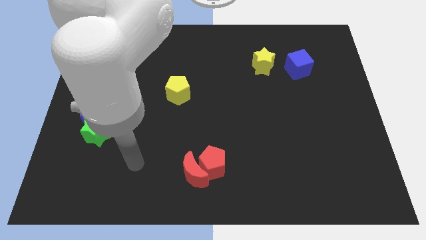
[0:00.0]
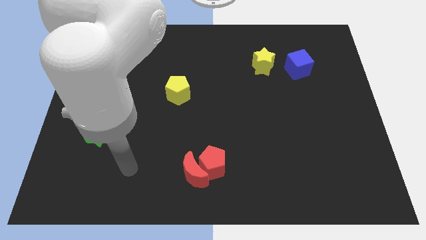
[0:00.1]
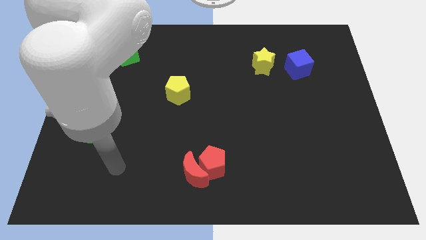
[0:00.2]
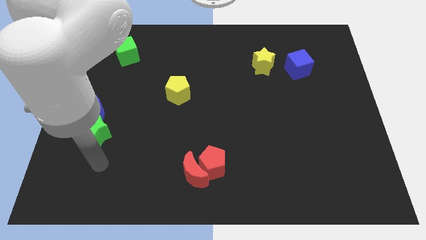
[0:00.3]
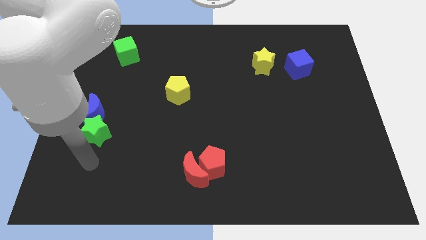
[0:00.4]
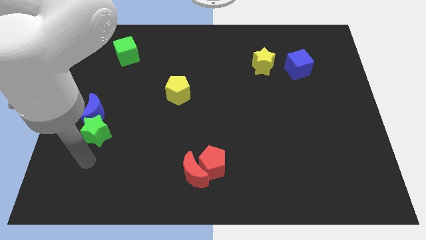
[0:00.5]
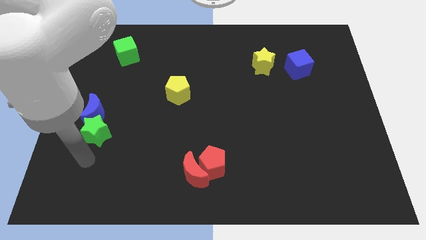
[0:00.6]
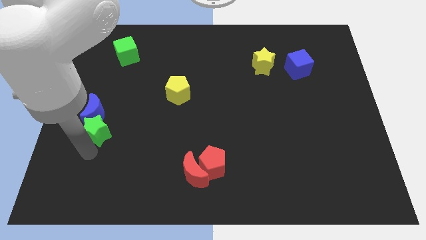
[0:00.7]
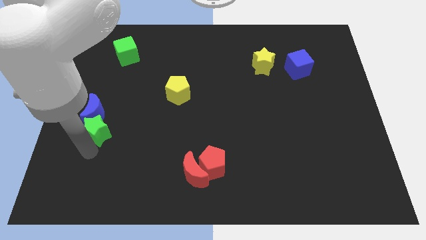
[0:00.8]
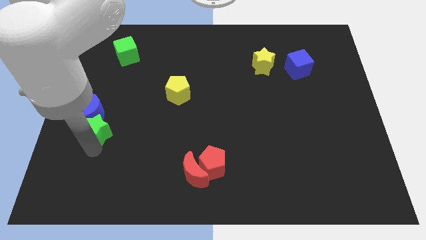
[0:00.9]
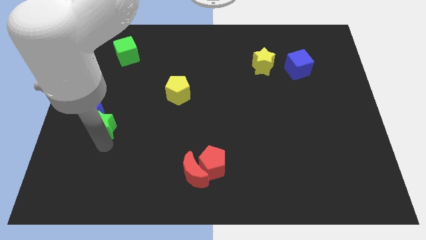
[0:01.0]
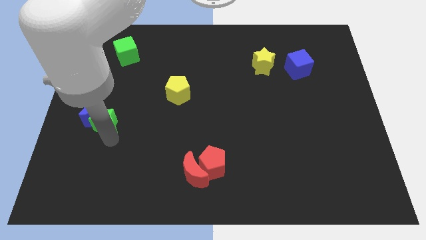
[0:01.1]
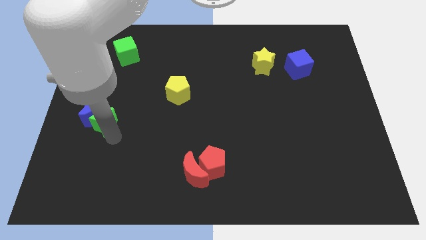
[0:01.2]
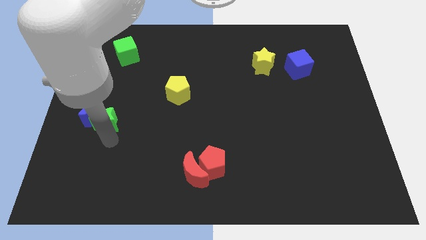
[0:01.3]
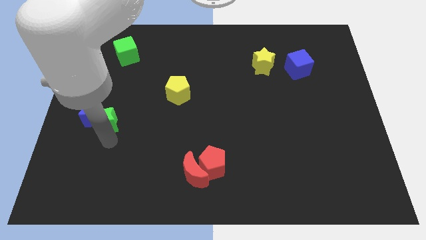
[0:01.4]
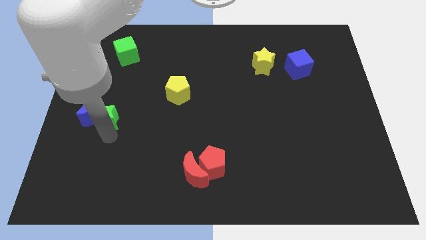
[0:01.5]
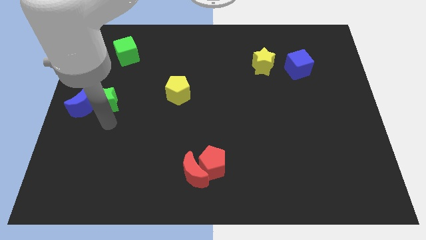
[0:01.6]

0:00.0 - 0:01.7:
place green star to the right of blue moon

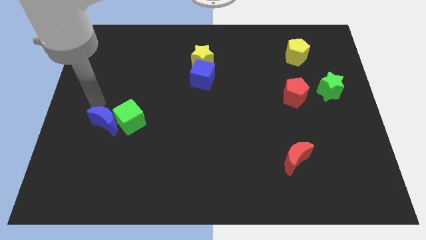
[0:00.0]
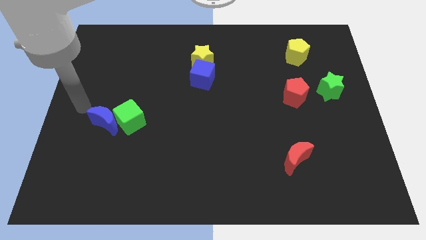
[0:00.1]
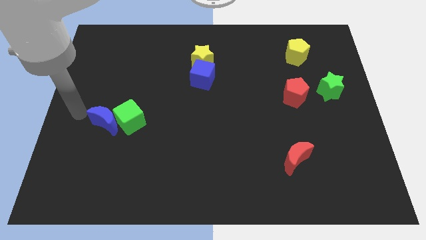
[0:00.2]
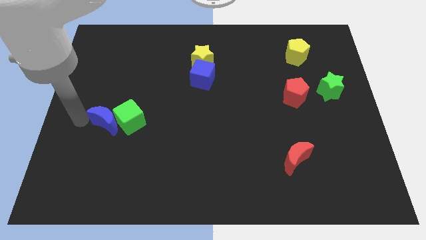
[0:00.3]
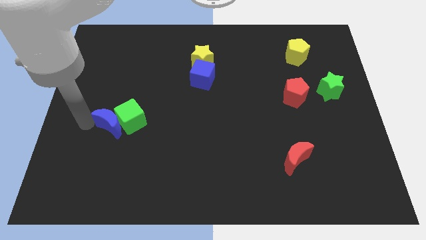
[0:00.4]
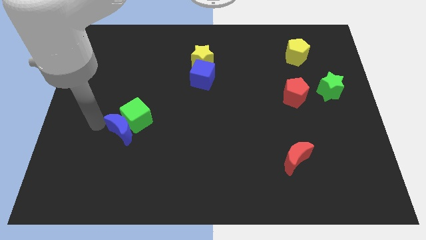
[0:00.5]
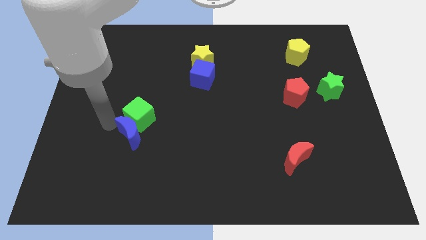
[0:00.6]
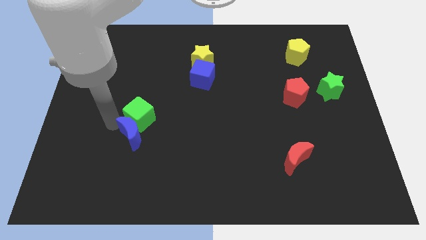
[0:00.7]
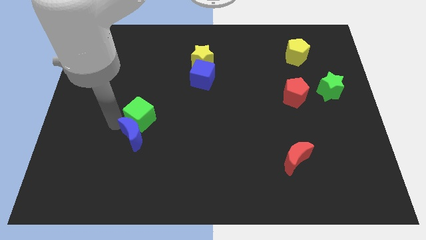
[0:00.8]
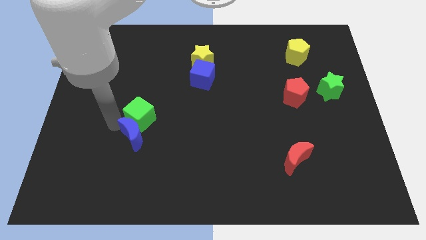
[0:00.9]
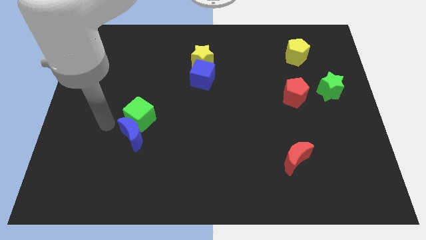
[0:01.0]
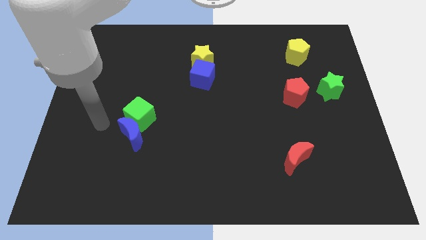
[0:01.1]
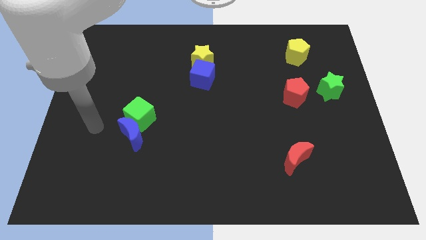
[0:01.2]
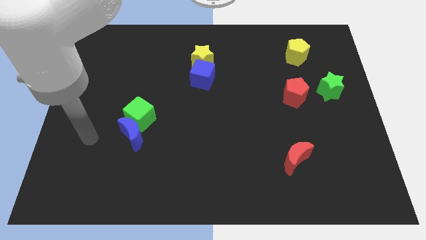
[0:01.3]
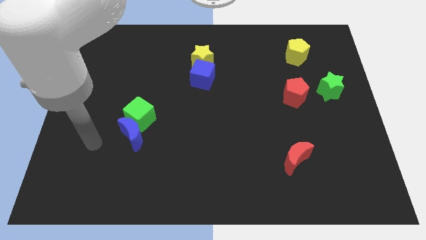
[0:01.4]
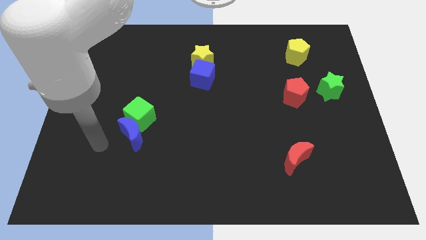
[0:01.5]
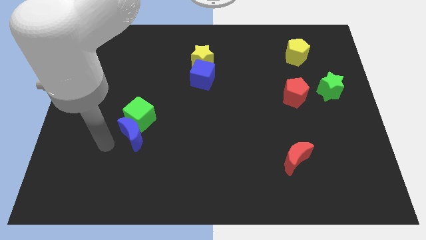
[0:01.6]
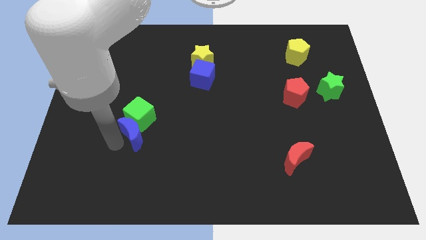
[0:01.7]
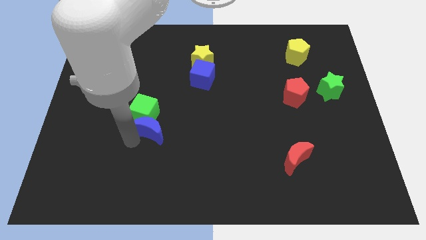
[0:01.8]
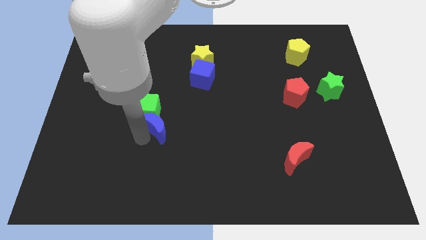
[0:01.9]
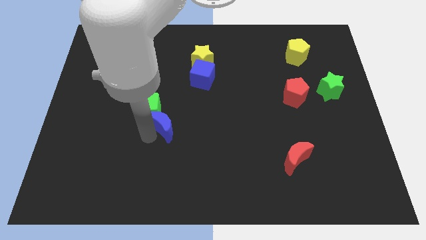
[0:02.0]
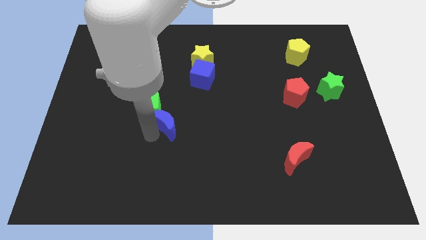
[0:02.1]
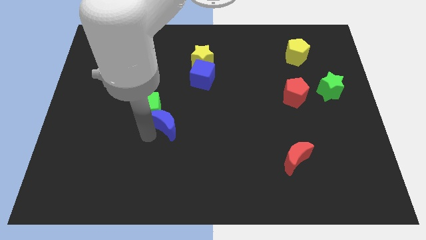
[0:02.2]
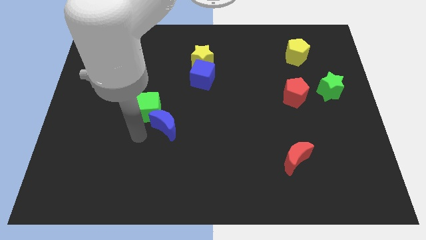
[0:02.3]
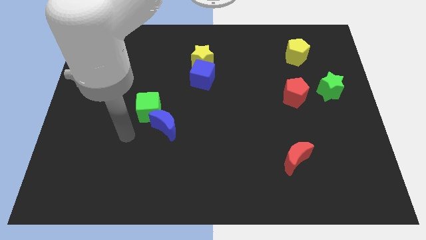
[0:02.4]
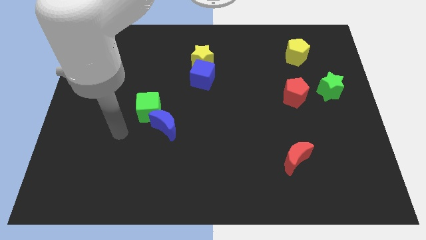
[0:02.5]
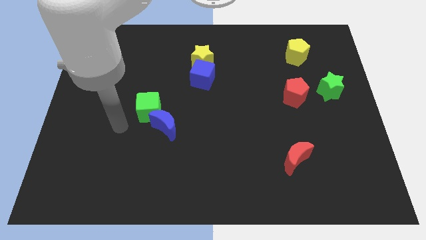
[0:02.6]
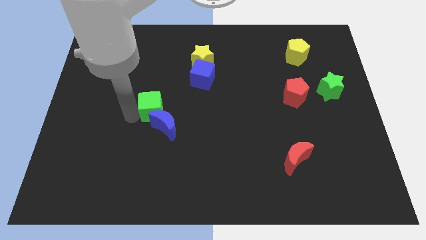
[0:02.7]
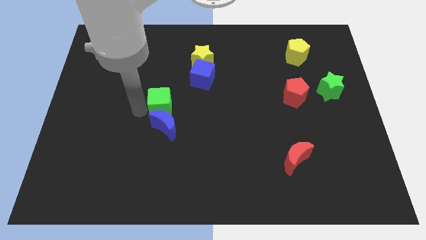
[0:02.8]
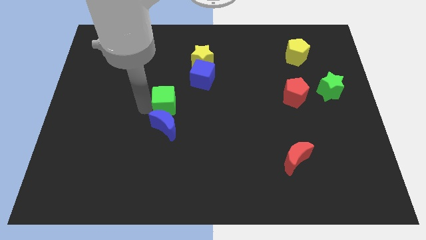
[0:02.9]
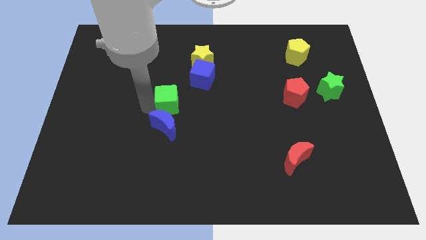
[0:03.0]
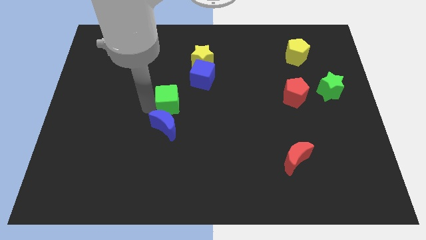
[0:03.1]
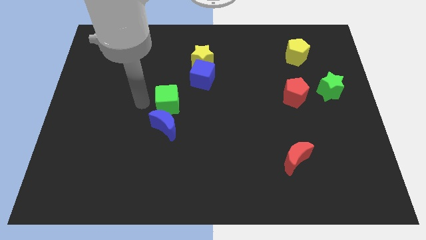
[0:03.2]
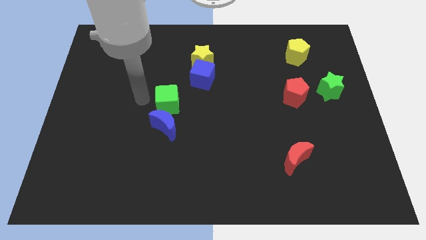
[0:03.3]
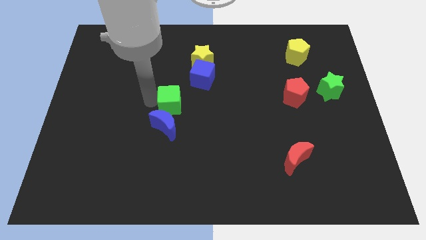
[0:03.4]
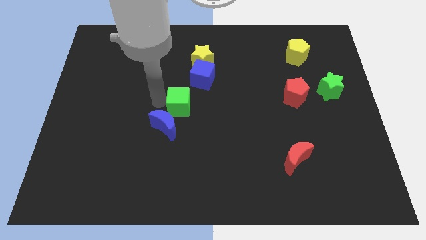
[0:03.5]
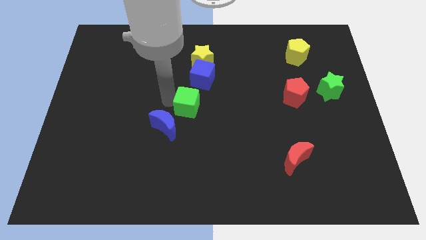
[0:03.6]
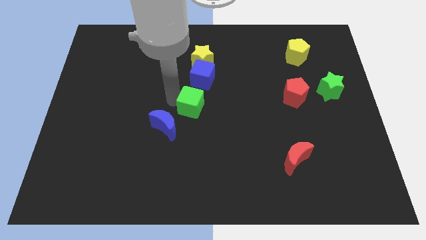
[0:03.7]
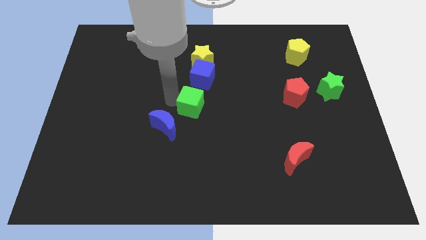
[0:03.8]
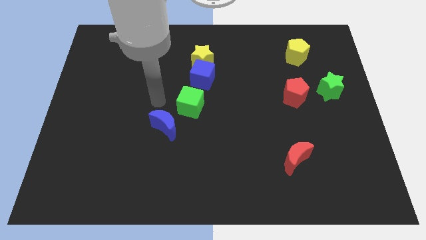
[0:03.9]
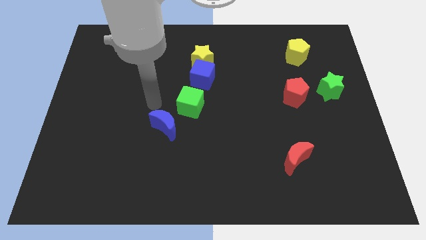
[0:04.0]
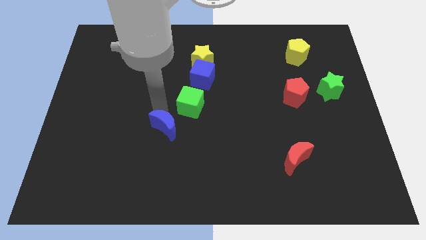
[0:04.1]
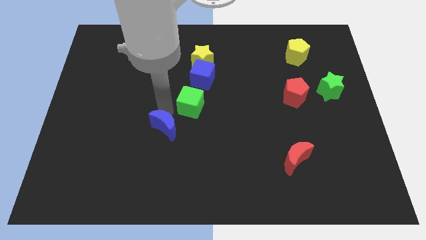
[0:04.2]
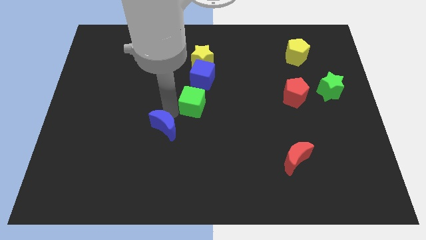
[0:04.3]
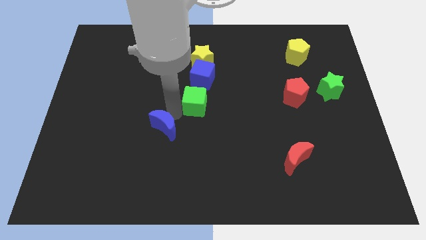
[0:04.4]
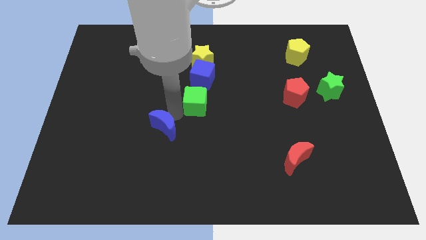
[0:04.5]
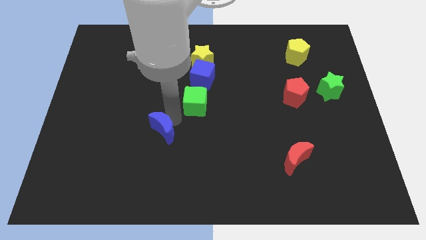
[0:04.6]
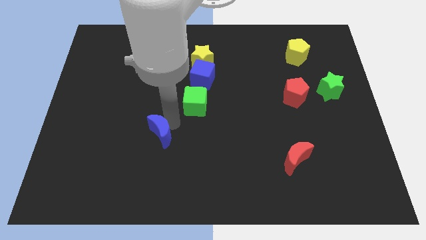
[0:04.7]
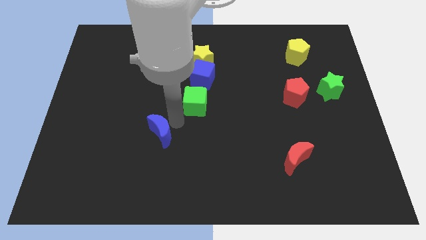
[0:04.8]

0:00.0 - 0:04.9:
push the green cube towards the blue cube

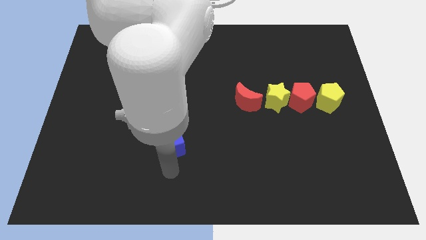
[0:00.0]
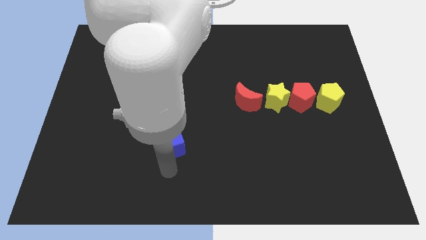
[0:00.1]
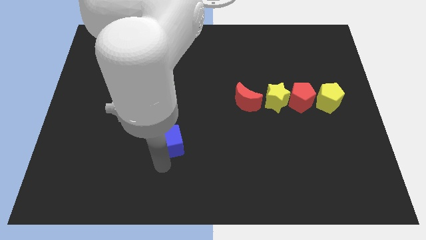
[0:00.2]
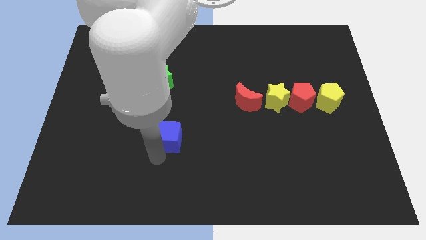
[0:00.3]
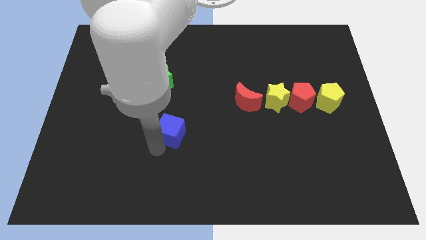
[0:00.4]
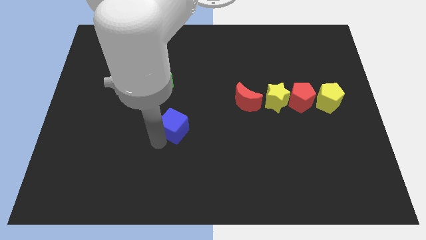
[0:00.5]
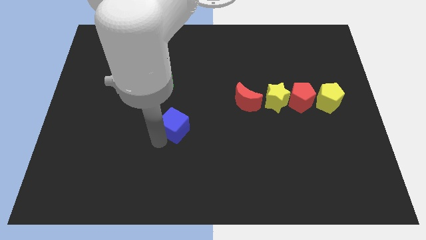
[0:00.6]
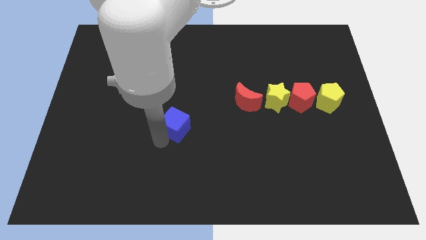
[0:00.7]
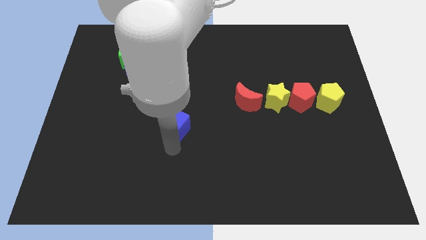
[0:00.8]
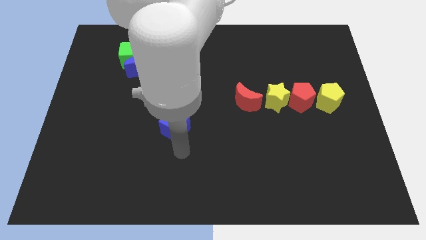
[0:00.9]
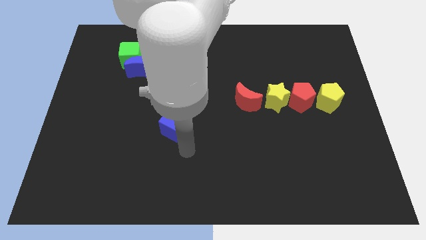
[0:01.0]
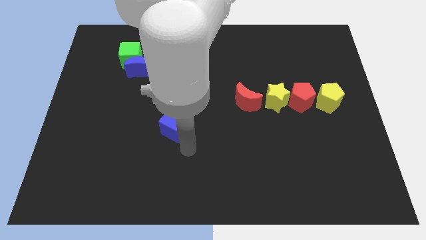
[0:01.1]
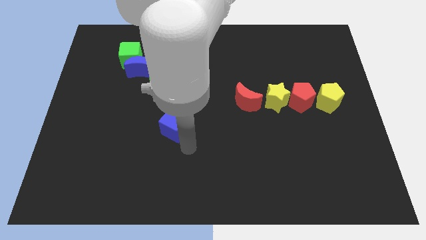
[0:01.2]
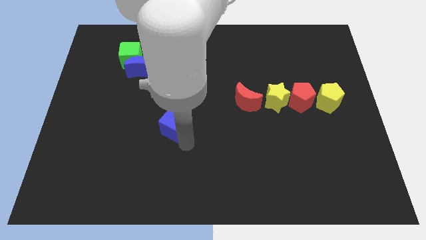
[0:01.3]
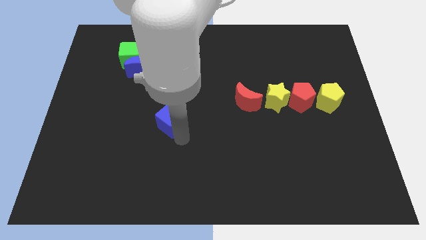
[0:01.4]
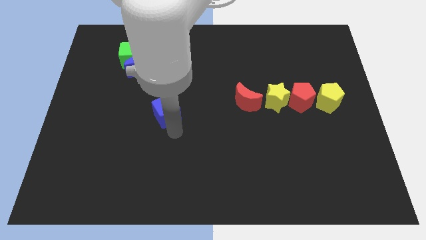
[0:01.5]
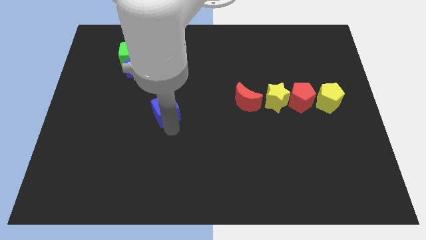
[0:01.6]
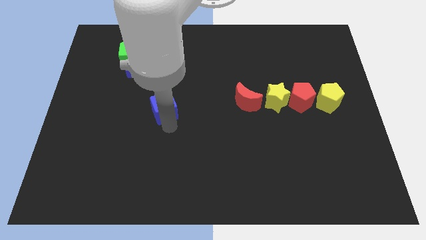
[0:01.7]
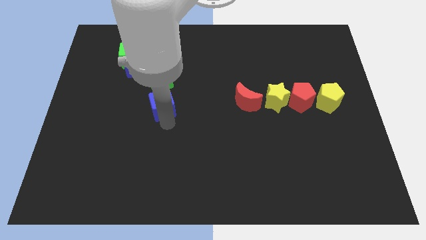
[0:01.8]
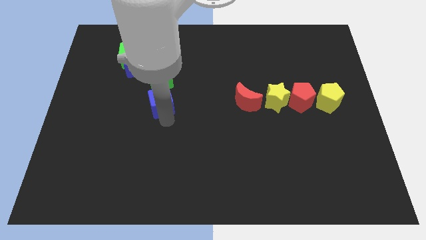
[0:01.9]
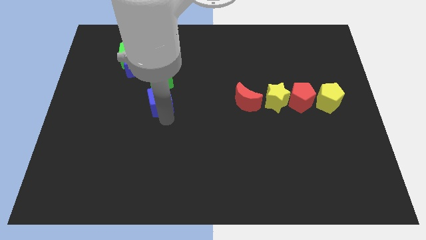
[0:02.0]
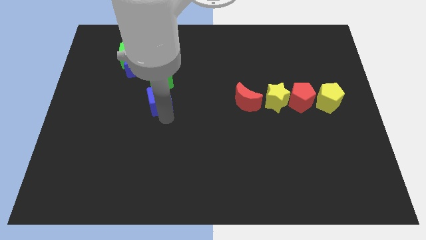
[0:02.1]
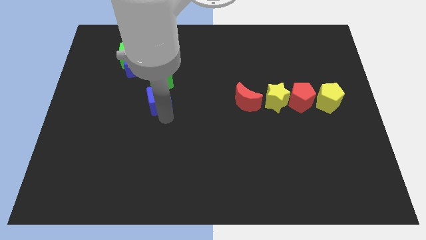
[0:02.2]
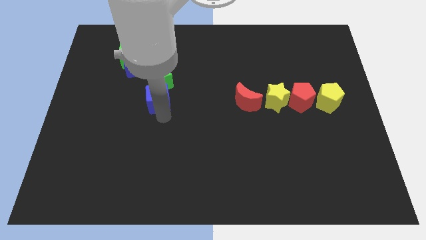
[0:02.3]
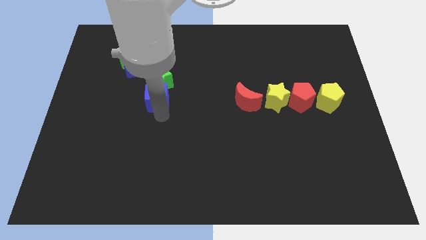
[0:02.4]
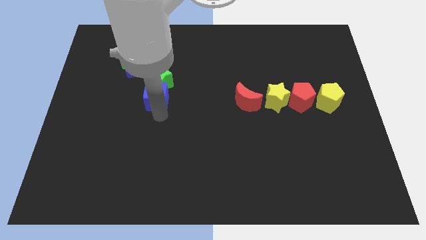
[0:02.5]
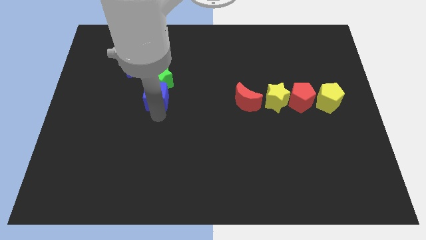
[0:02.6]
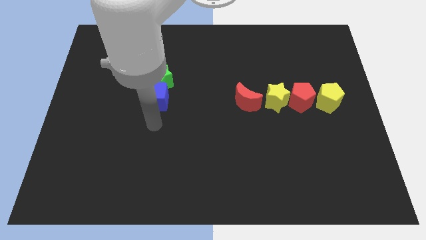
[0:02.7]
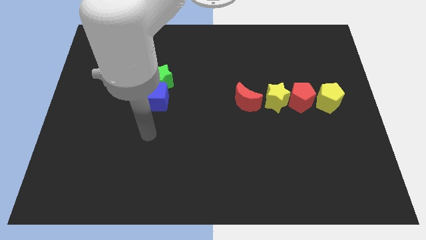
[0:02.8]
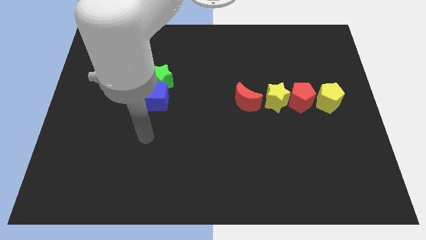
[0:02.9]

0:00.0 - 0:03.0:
move the blue cube below the green star
